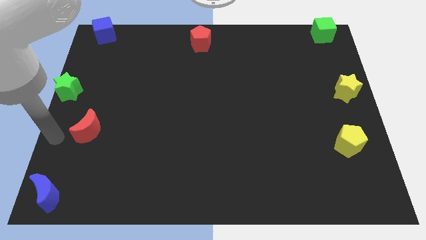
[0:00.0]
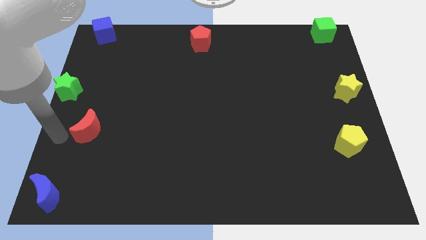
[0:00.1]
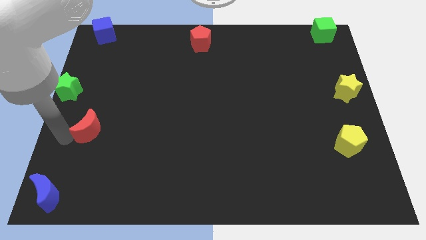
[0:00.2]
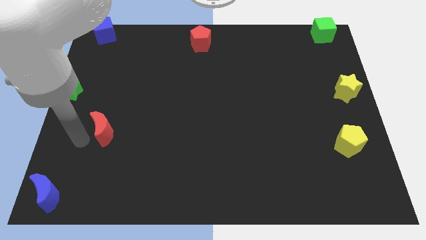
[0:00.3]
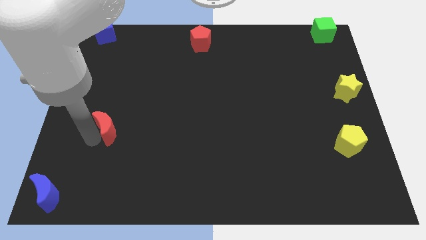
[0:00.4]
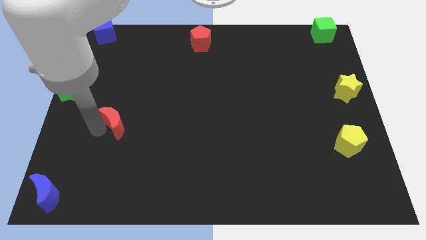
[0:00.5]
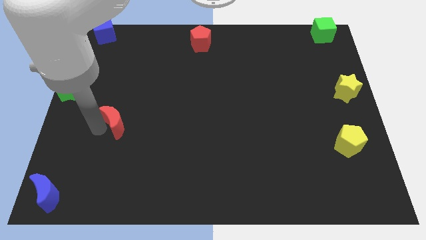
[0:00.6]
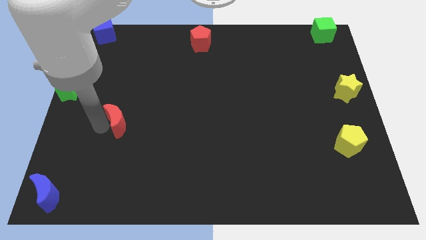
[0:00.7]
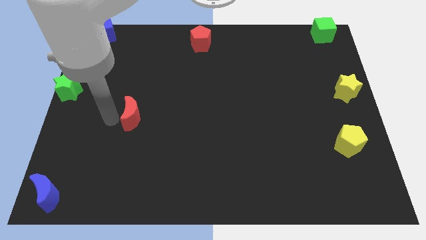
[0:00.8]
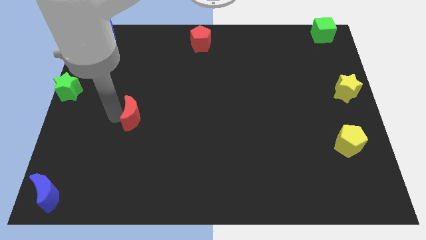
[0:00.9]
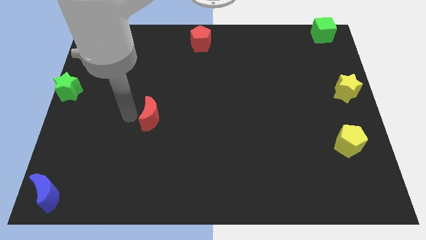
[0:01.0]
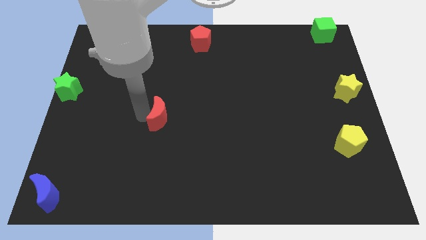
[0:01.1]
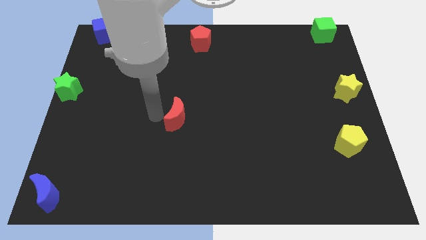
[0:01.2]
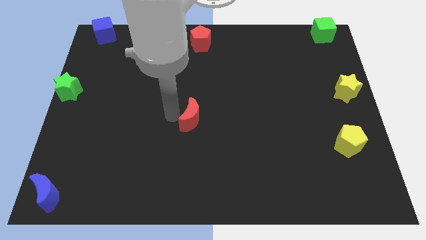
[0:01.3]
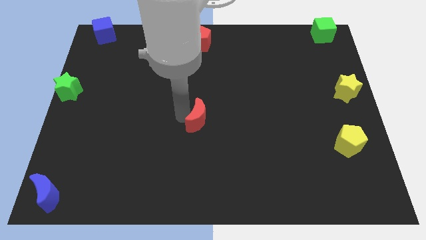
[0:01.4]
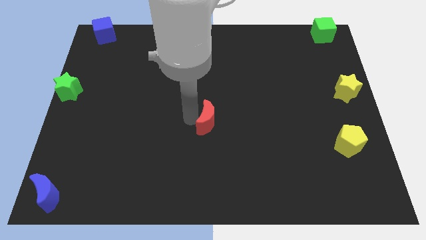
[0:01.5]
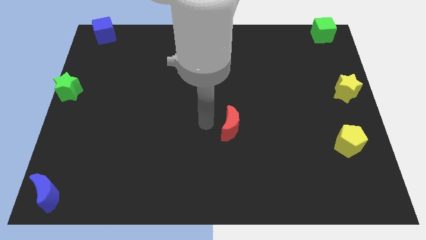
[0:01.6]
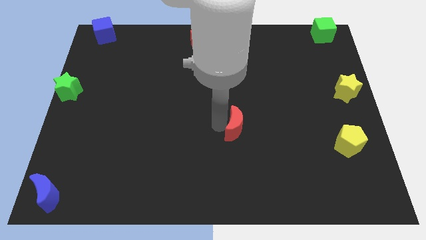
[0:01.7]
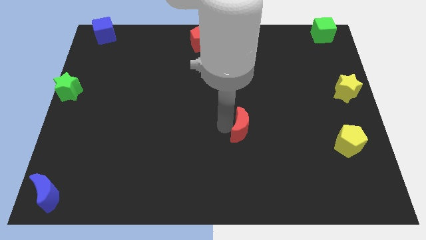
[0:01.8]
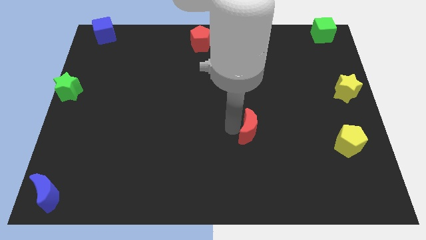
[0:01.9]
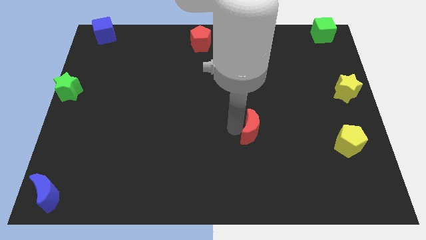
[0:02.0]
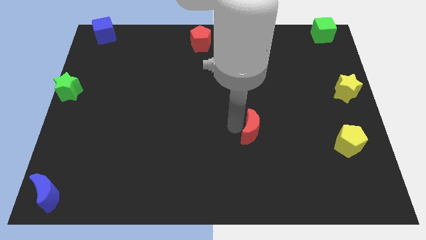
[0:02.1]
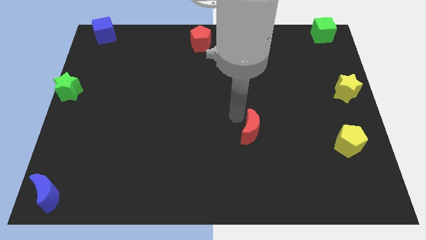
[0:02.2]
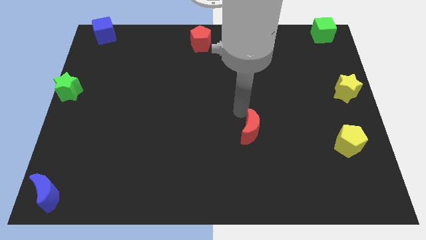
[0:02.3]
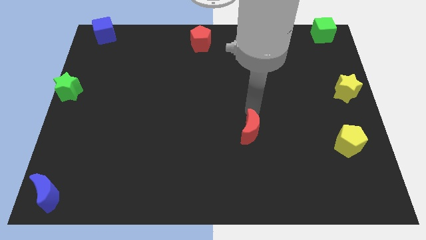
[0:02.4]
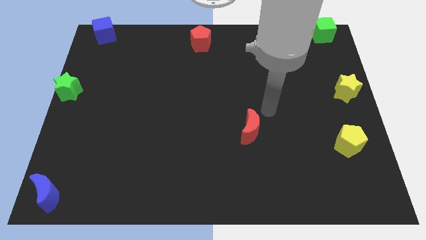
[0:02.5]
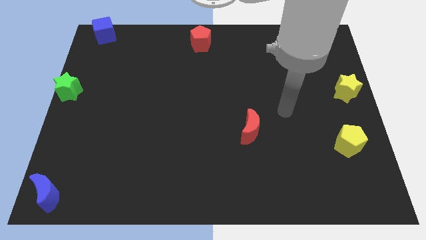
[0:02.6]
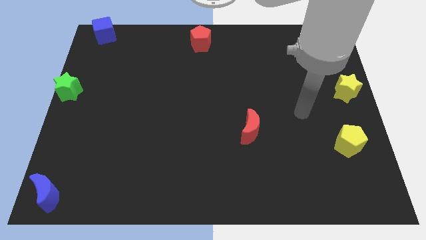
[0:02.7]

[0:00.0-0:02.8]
move the red crescent towards the right side of the board

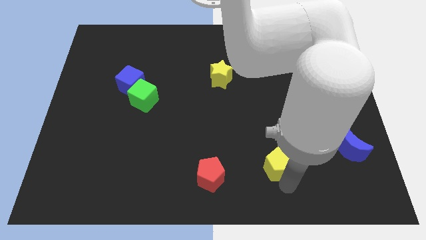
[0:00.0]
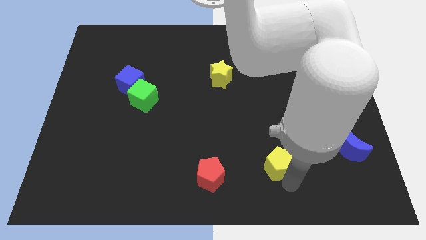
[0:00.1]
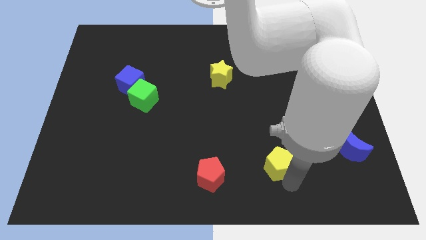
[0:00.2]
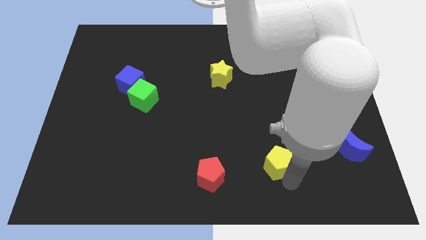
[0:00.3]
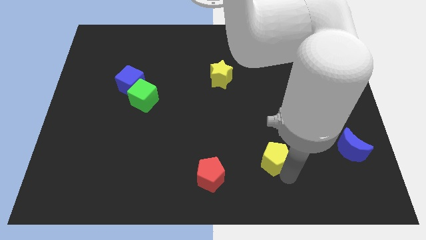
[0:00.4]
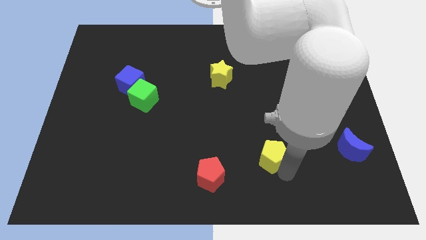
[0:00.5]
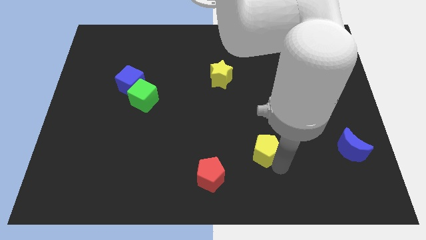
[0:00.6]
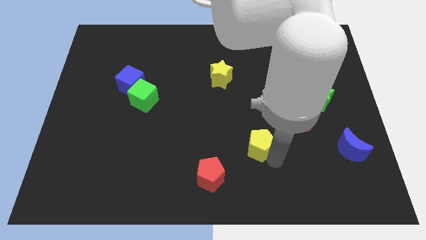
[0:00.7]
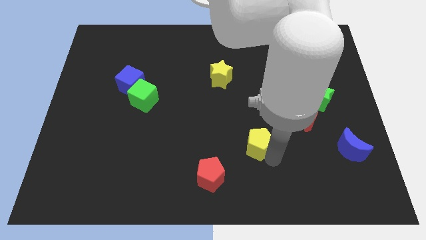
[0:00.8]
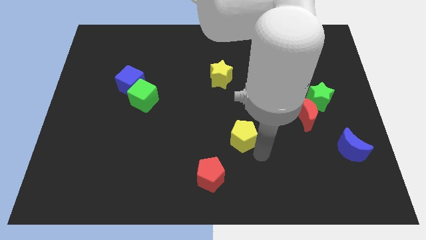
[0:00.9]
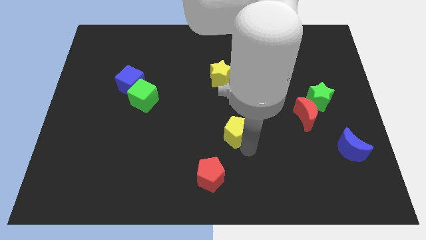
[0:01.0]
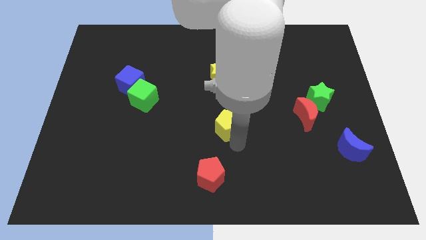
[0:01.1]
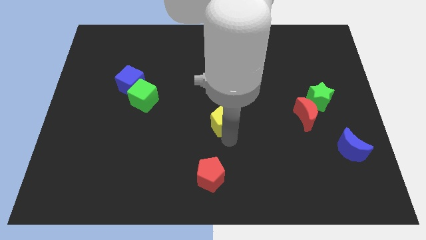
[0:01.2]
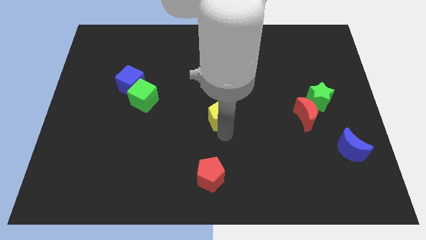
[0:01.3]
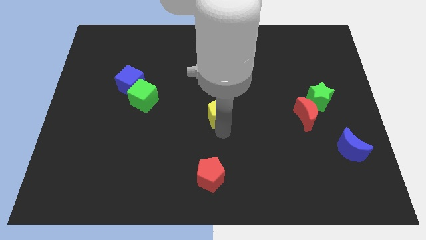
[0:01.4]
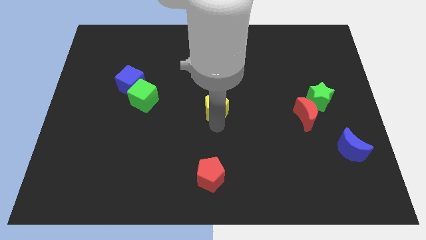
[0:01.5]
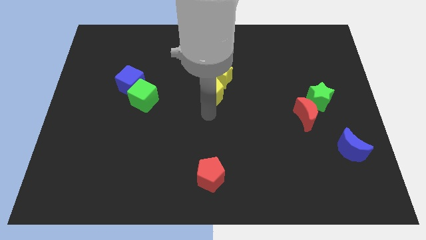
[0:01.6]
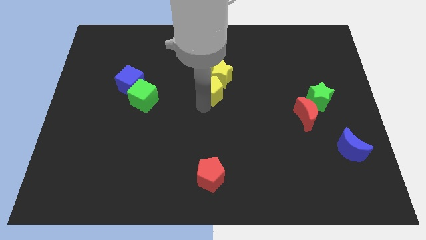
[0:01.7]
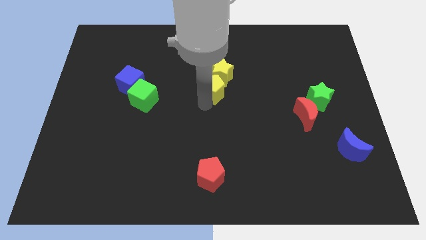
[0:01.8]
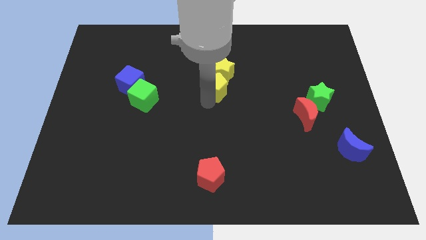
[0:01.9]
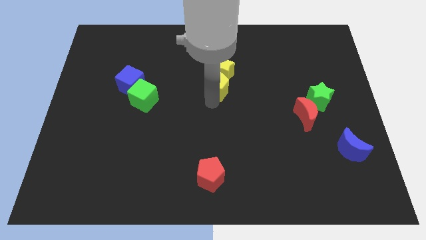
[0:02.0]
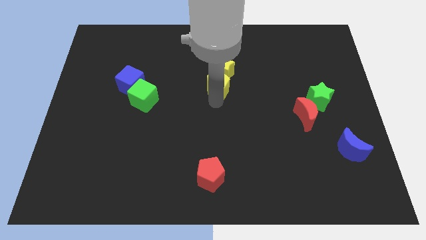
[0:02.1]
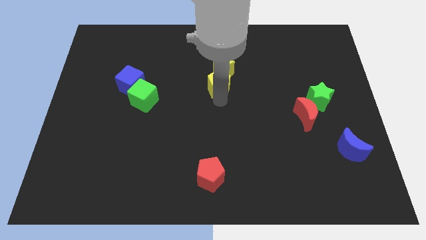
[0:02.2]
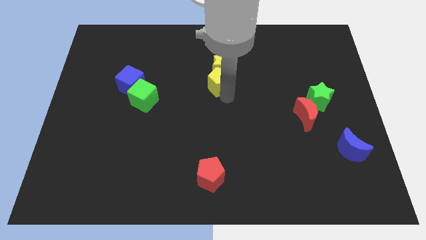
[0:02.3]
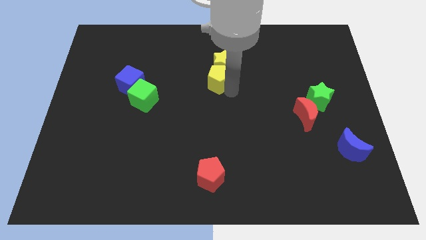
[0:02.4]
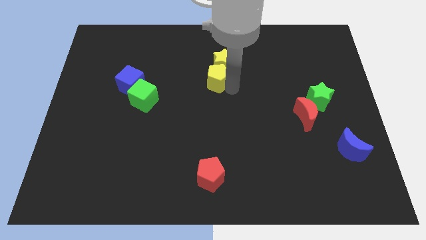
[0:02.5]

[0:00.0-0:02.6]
move yellow pentagon into yellow star

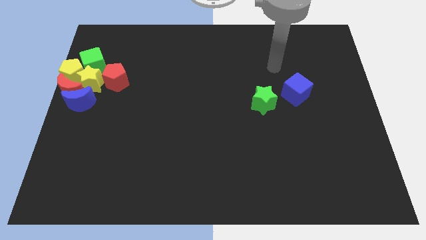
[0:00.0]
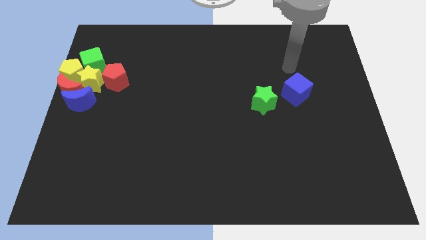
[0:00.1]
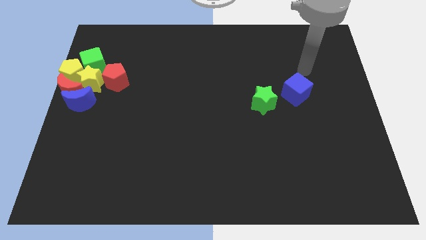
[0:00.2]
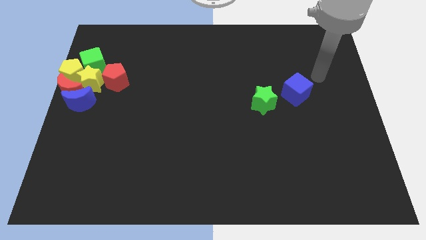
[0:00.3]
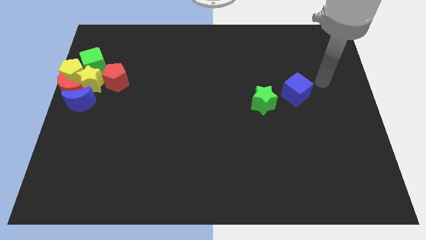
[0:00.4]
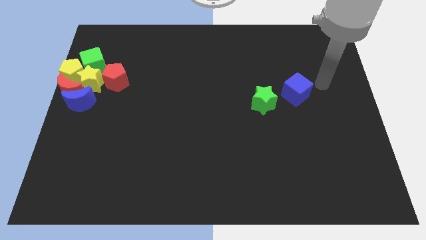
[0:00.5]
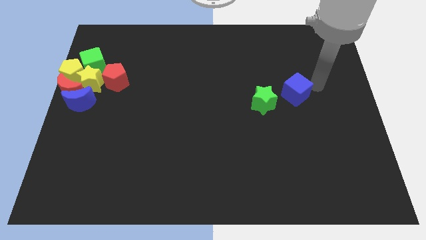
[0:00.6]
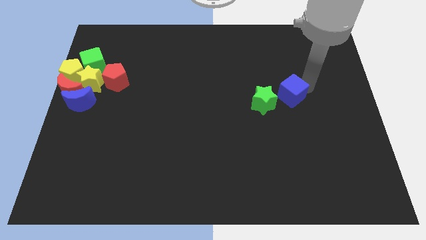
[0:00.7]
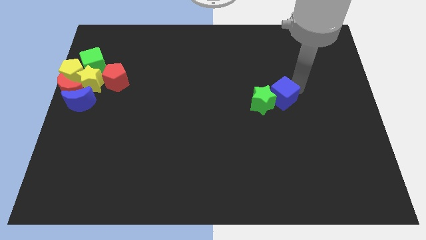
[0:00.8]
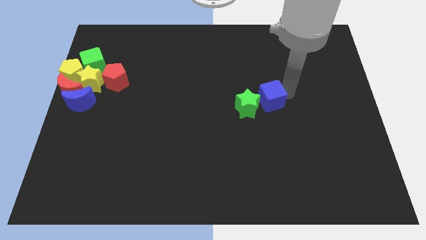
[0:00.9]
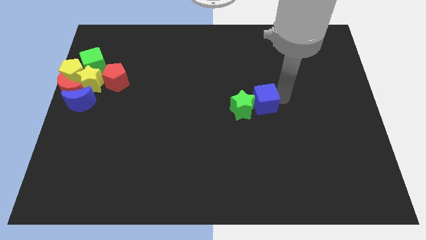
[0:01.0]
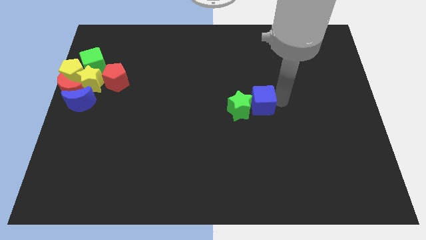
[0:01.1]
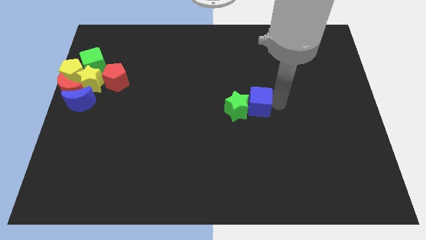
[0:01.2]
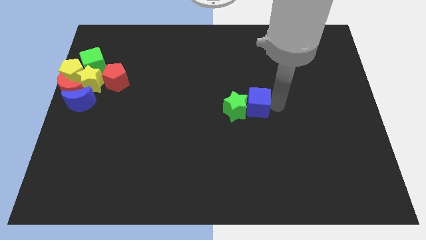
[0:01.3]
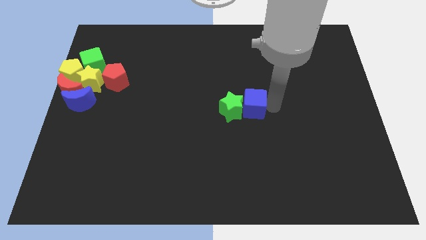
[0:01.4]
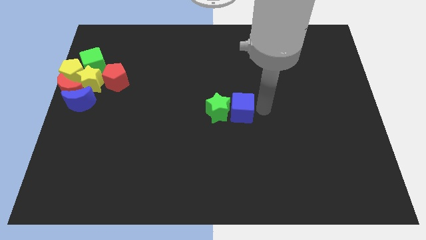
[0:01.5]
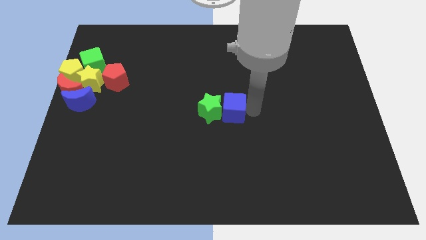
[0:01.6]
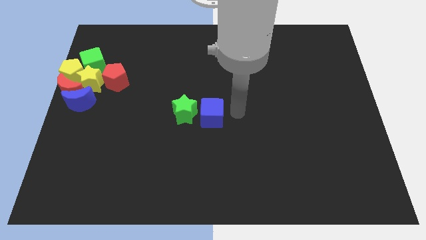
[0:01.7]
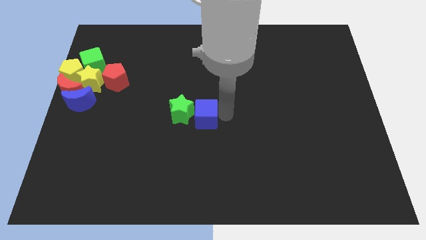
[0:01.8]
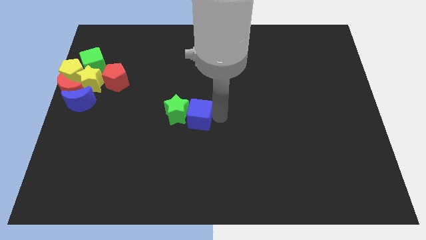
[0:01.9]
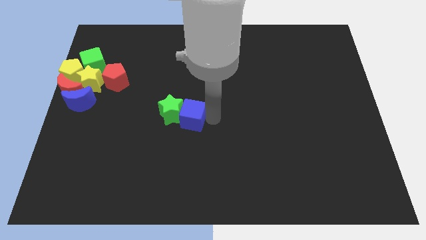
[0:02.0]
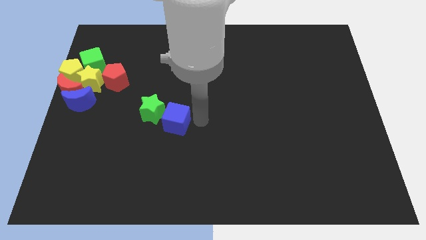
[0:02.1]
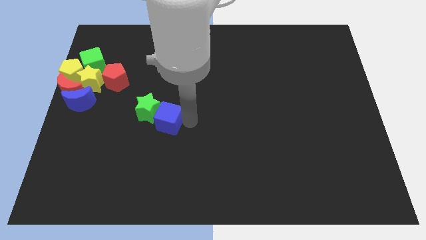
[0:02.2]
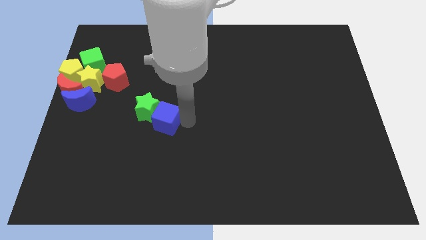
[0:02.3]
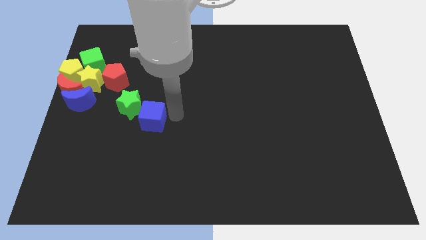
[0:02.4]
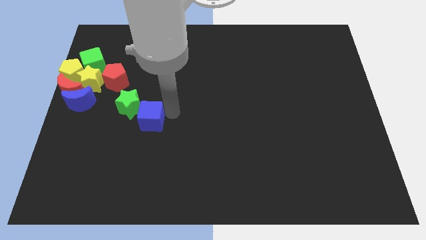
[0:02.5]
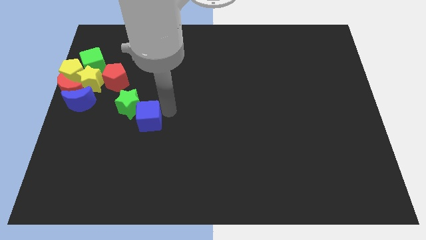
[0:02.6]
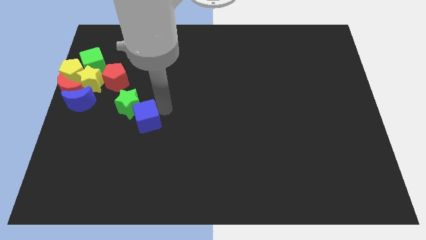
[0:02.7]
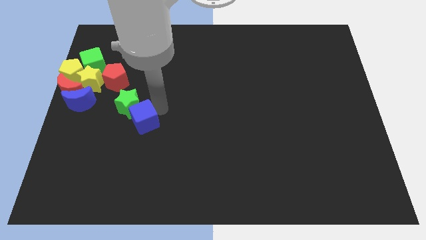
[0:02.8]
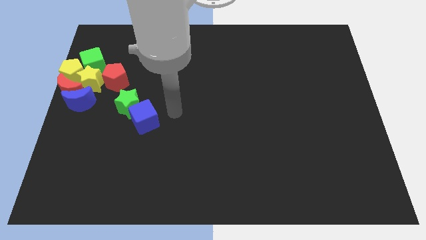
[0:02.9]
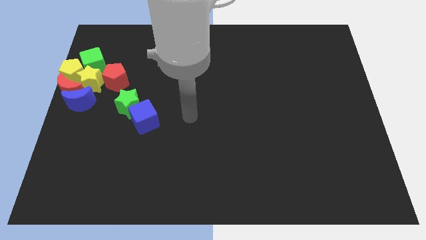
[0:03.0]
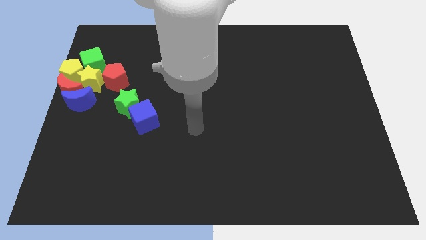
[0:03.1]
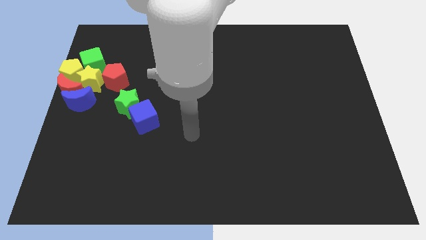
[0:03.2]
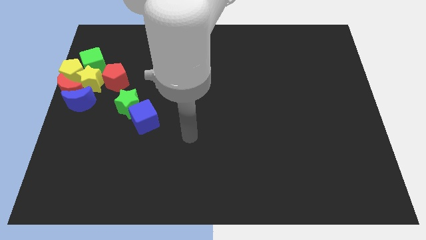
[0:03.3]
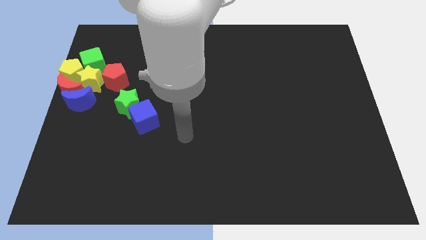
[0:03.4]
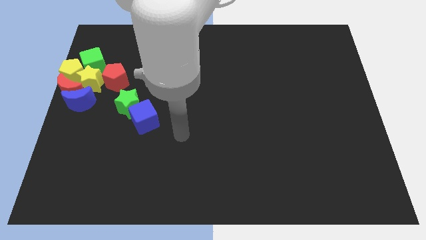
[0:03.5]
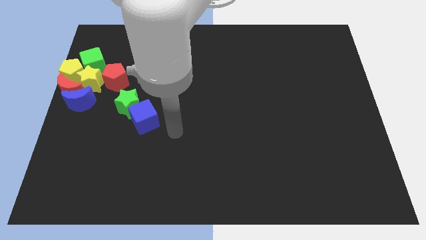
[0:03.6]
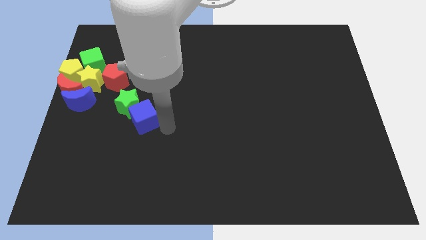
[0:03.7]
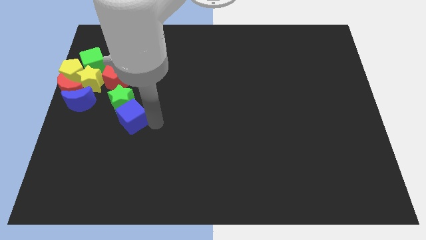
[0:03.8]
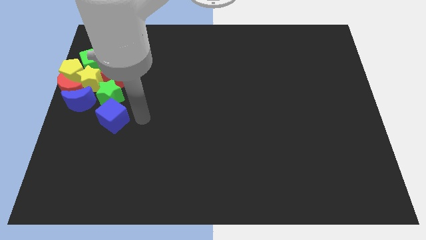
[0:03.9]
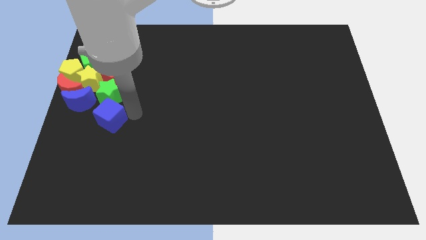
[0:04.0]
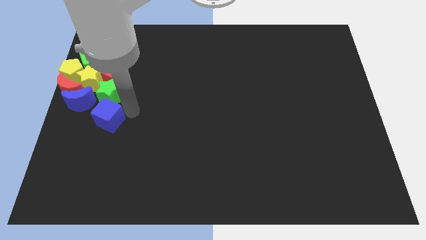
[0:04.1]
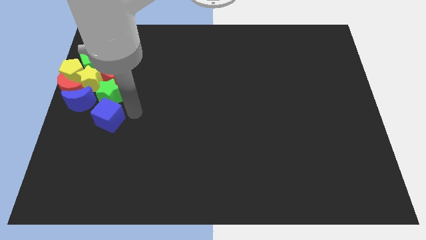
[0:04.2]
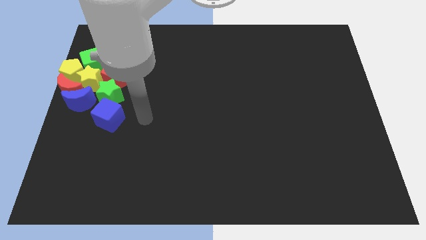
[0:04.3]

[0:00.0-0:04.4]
push the green star into group of blocks with blue cube
